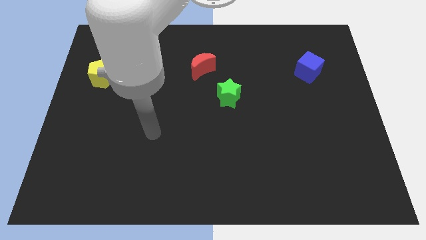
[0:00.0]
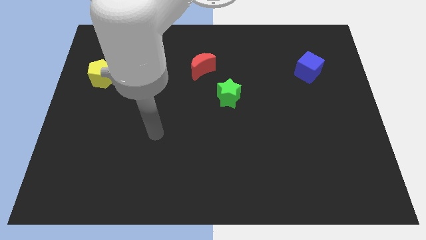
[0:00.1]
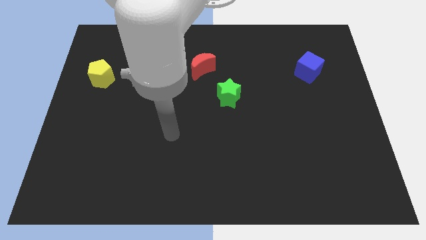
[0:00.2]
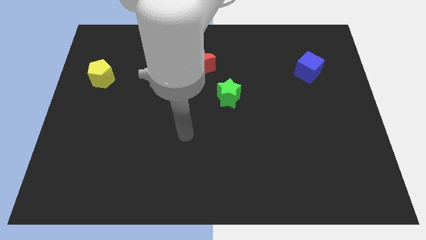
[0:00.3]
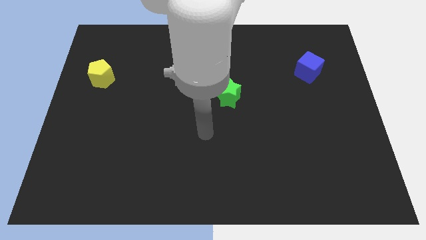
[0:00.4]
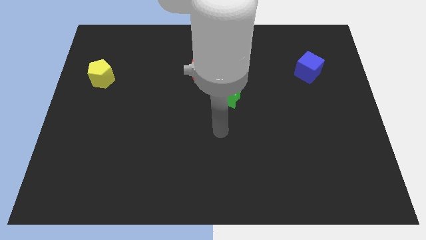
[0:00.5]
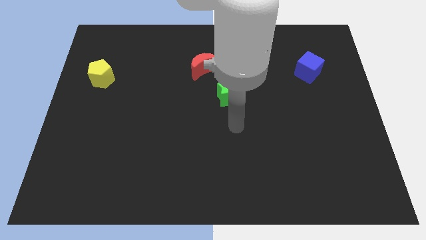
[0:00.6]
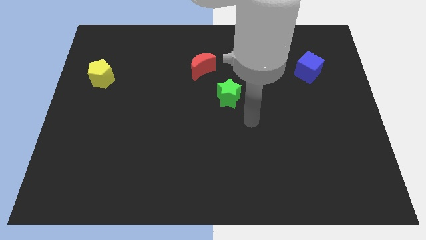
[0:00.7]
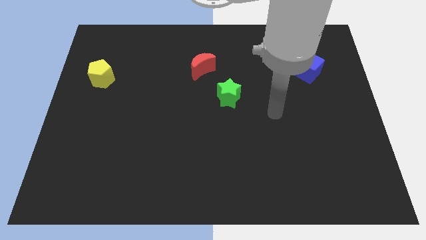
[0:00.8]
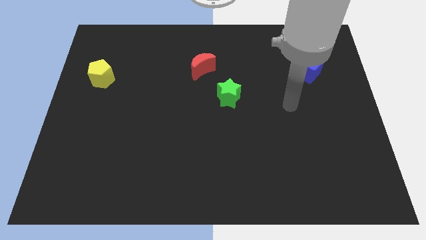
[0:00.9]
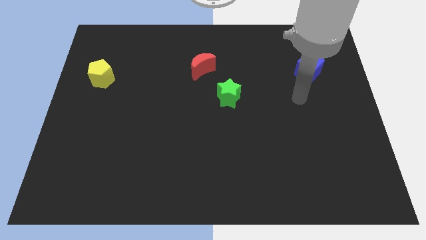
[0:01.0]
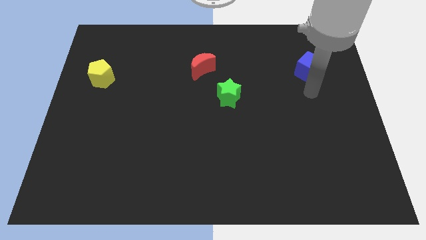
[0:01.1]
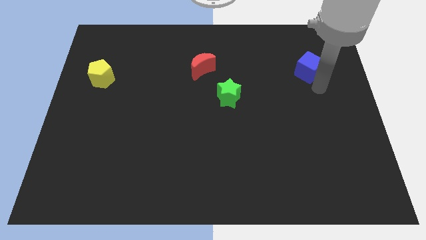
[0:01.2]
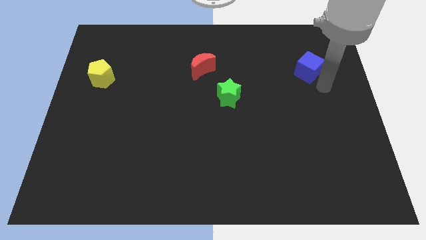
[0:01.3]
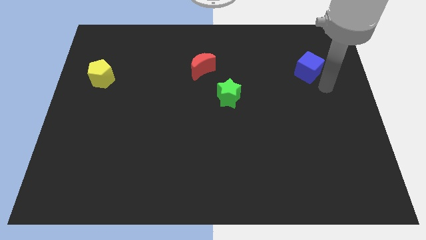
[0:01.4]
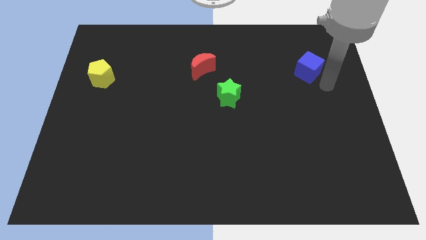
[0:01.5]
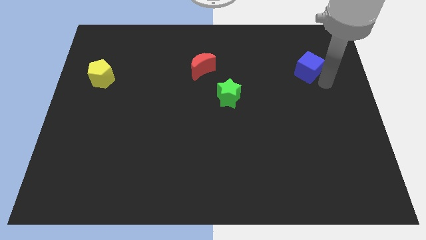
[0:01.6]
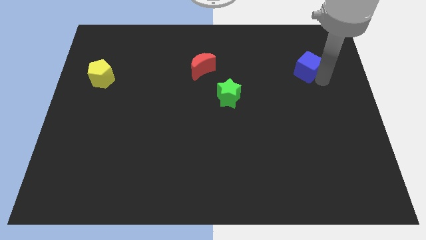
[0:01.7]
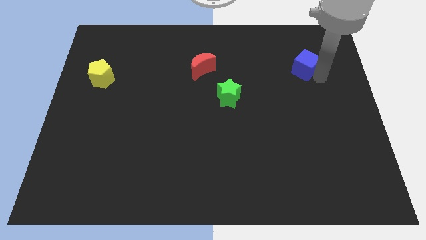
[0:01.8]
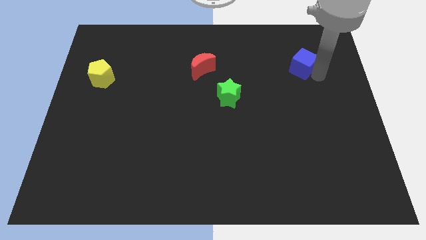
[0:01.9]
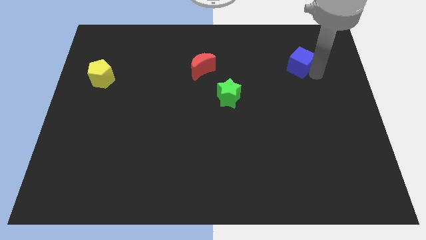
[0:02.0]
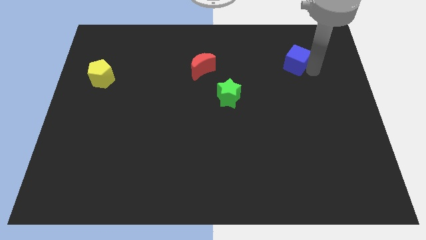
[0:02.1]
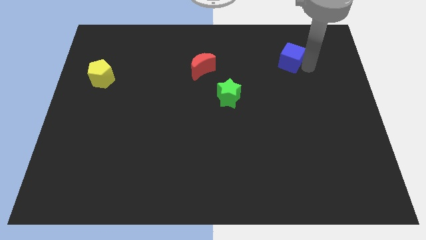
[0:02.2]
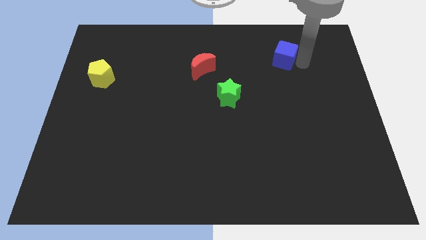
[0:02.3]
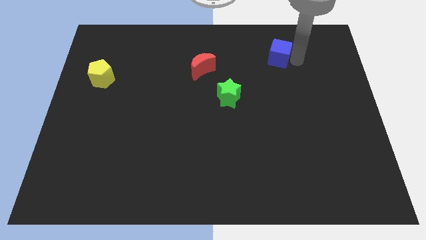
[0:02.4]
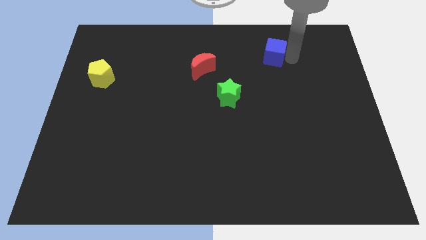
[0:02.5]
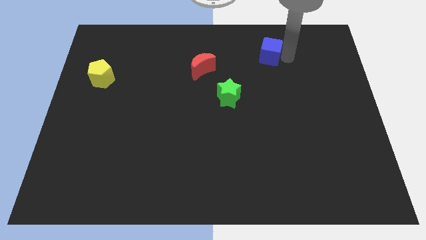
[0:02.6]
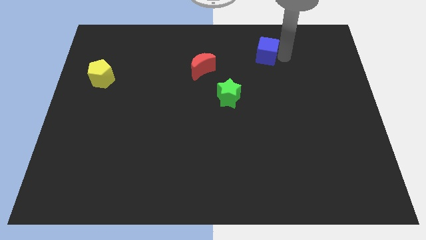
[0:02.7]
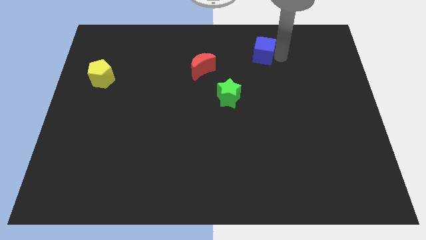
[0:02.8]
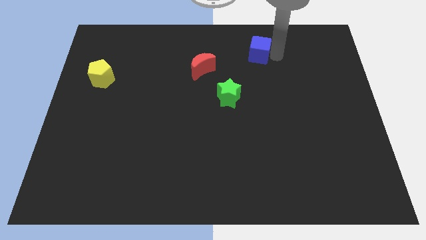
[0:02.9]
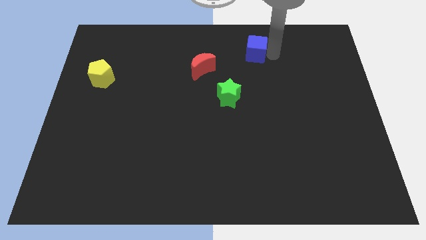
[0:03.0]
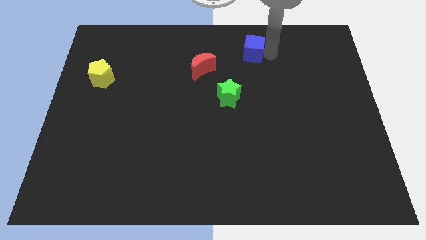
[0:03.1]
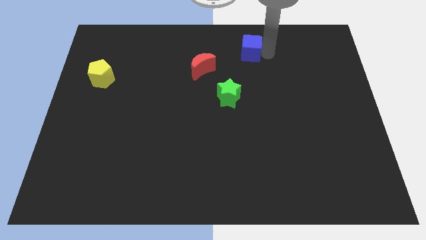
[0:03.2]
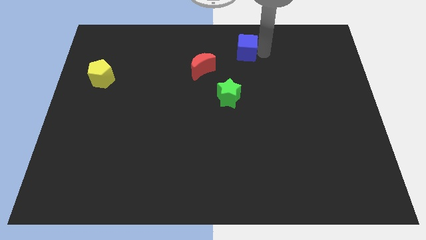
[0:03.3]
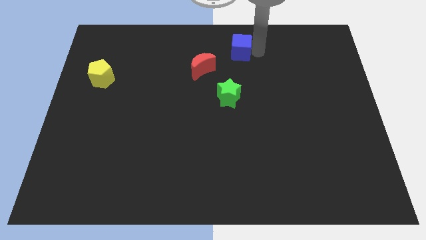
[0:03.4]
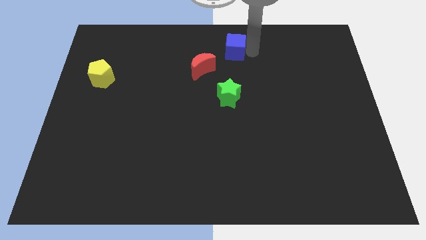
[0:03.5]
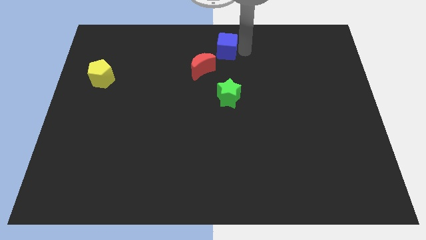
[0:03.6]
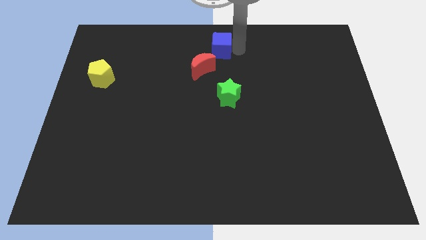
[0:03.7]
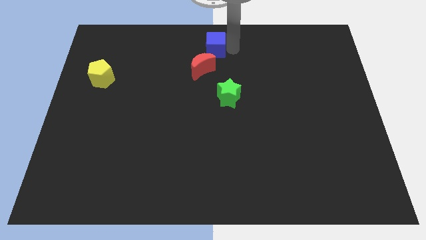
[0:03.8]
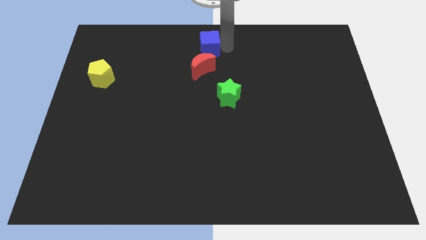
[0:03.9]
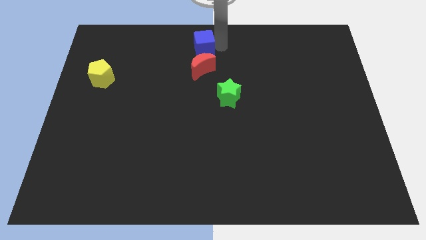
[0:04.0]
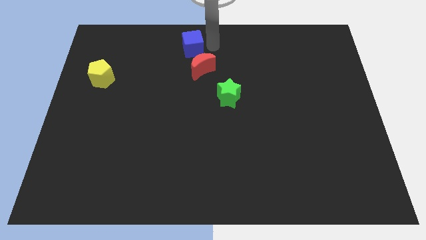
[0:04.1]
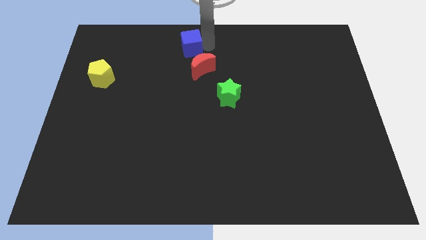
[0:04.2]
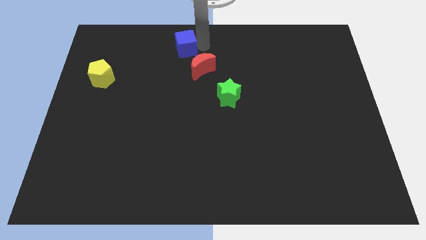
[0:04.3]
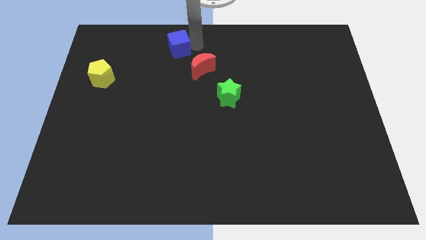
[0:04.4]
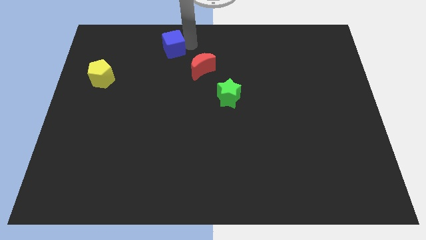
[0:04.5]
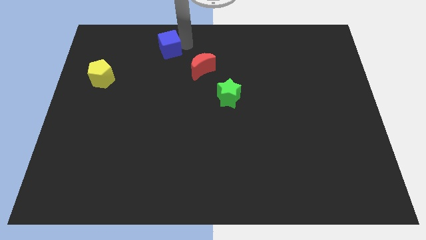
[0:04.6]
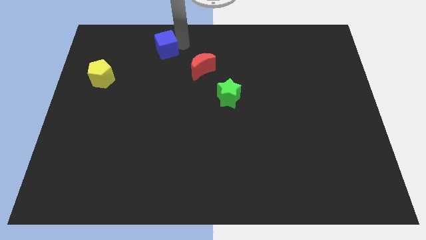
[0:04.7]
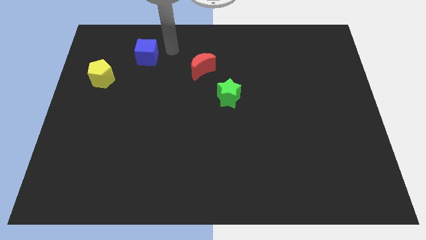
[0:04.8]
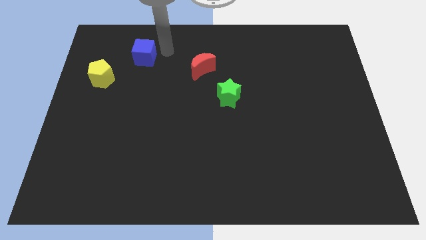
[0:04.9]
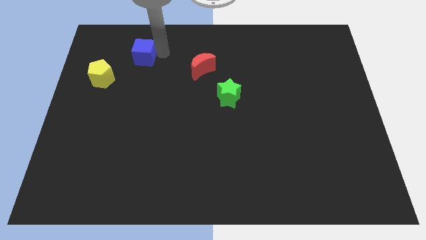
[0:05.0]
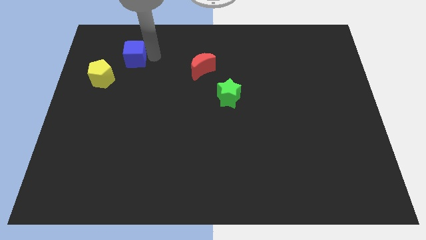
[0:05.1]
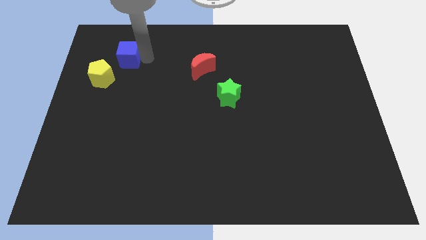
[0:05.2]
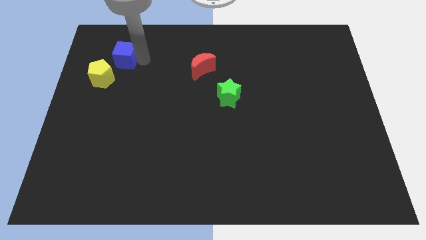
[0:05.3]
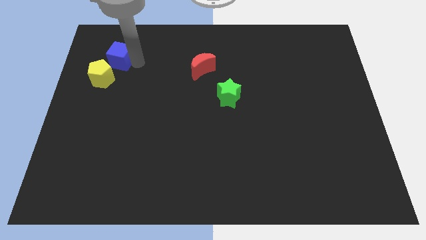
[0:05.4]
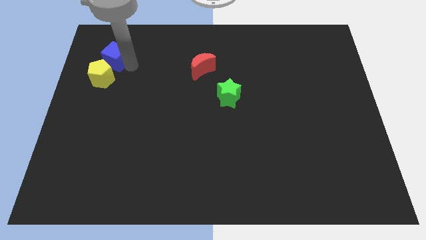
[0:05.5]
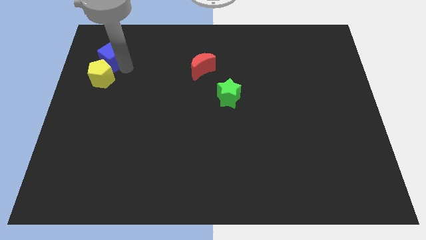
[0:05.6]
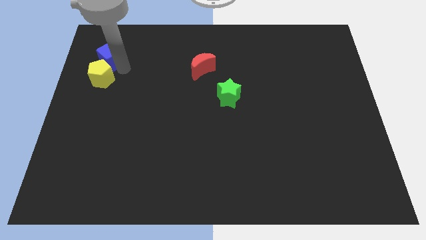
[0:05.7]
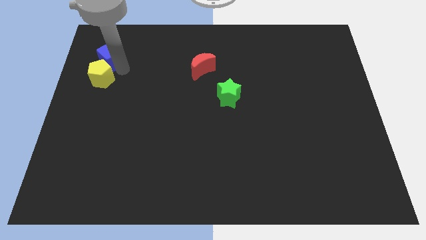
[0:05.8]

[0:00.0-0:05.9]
move the blue cube close to the yellow block

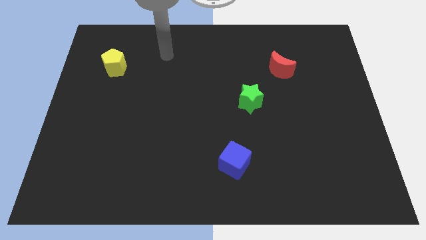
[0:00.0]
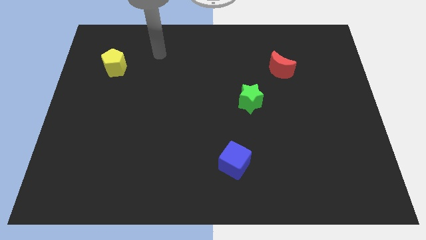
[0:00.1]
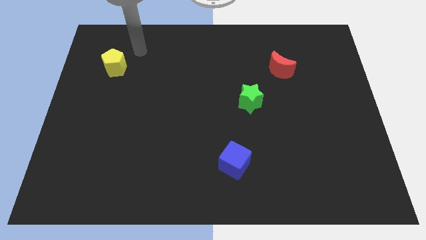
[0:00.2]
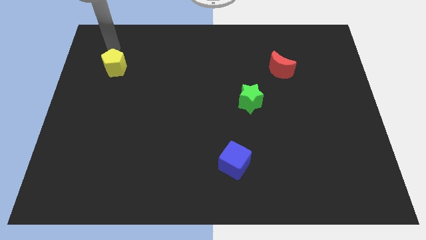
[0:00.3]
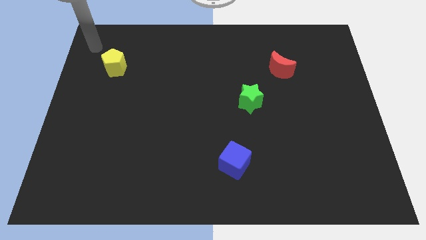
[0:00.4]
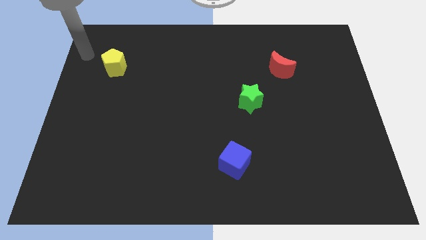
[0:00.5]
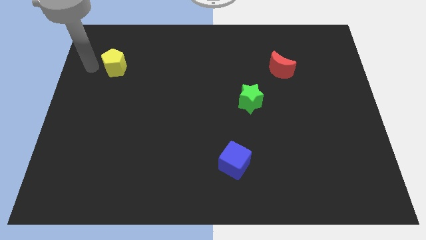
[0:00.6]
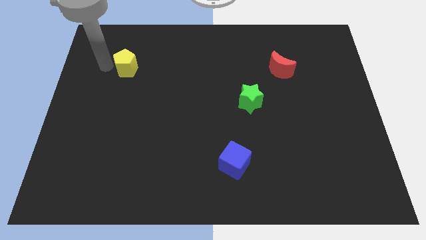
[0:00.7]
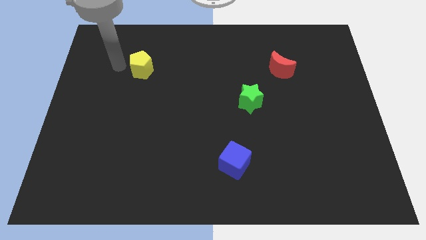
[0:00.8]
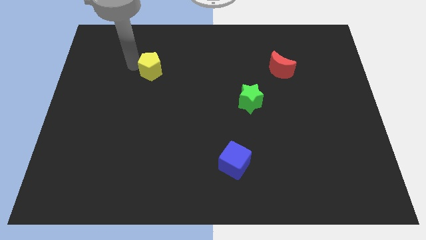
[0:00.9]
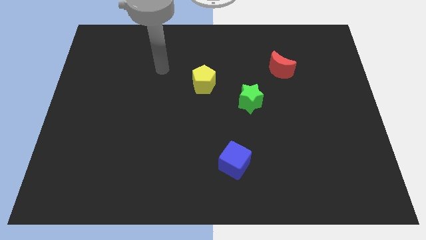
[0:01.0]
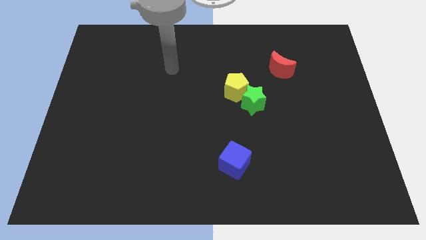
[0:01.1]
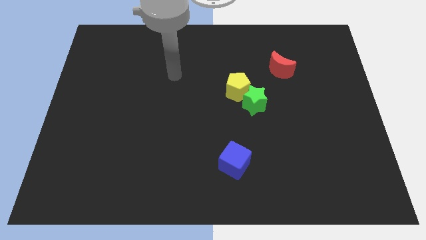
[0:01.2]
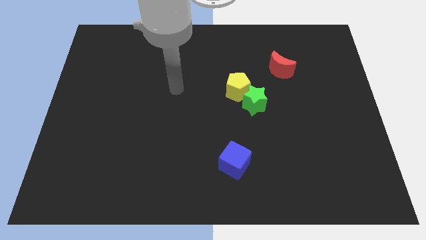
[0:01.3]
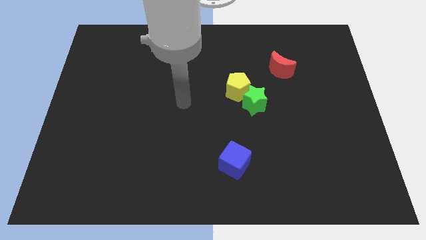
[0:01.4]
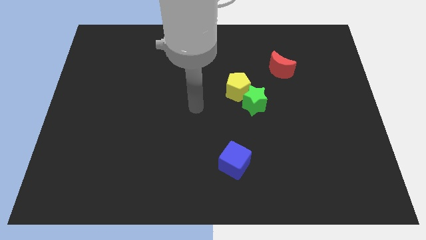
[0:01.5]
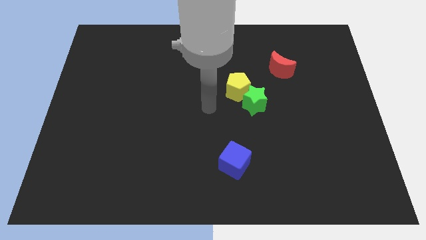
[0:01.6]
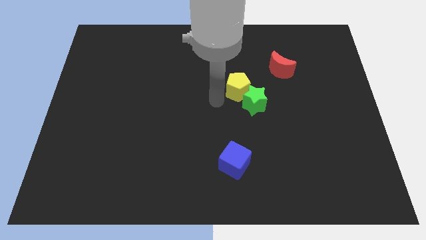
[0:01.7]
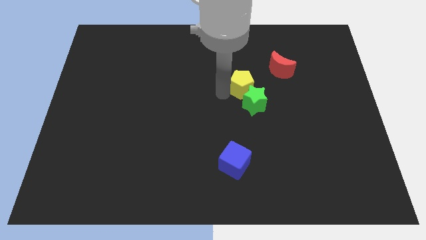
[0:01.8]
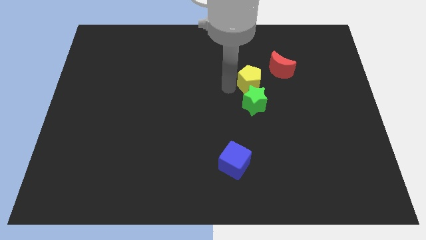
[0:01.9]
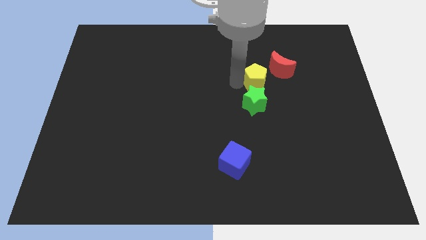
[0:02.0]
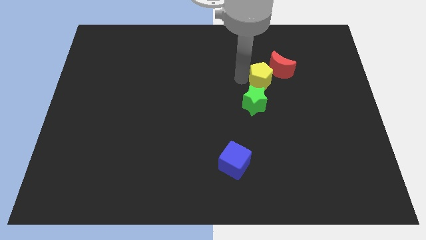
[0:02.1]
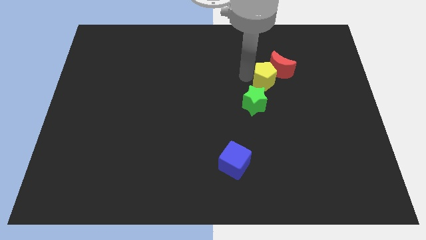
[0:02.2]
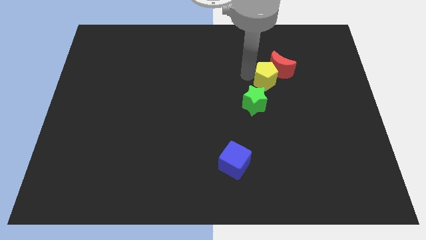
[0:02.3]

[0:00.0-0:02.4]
put the yellow block next to the moon

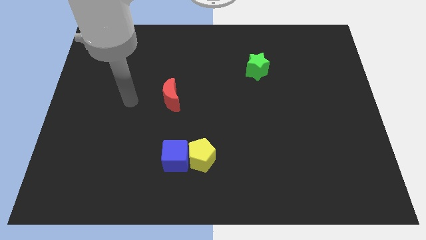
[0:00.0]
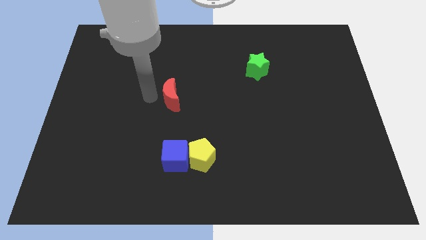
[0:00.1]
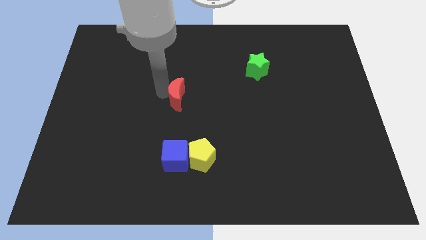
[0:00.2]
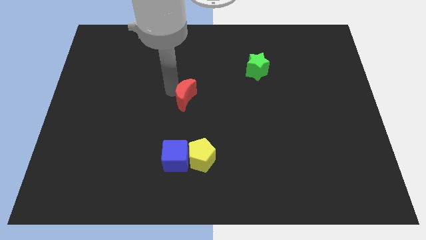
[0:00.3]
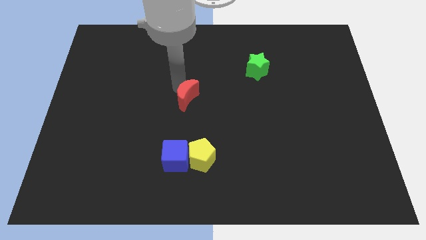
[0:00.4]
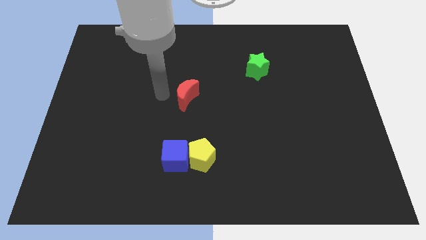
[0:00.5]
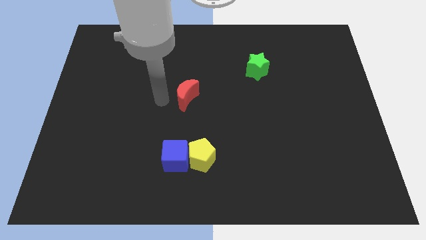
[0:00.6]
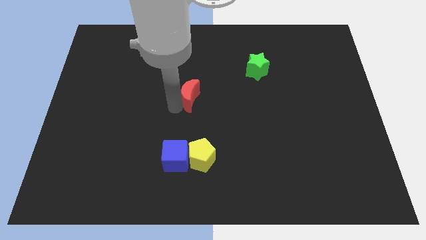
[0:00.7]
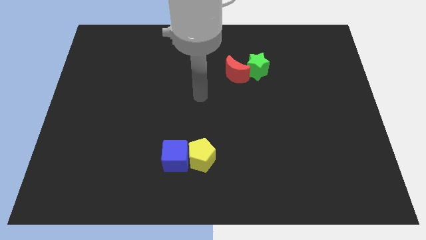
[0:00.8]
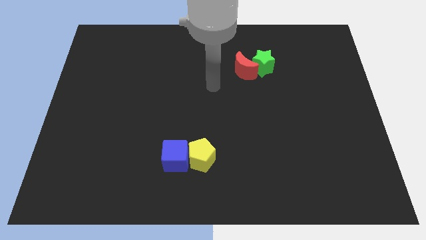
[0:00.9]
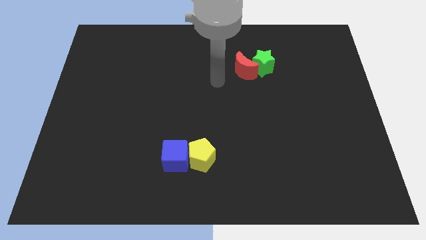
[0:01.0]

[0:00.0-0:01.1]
move the red block next to the green block
